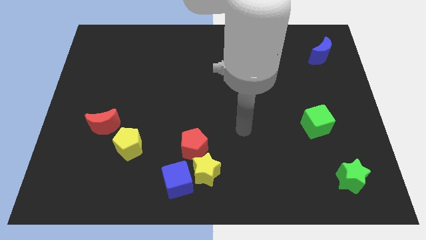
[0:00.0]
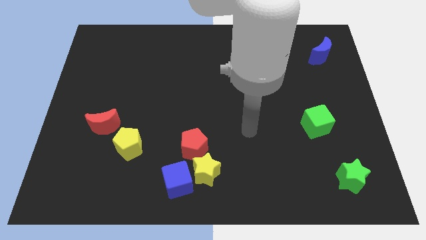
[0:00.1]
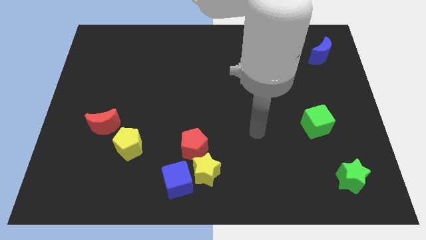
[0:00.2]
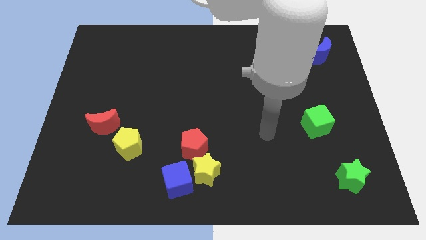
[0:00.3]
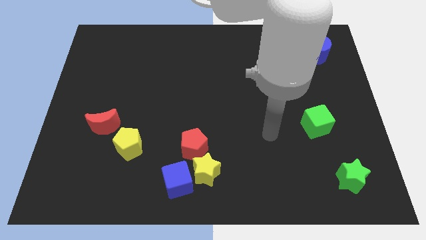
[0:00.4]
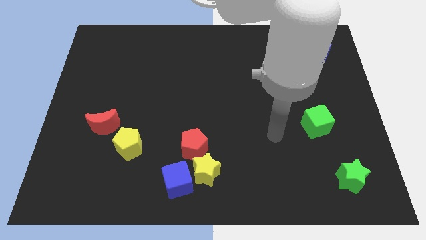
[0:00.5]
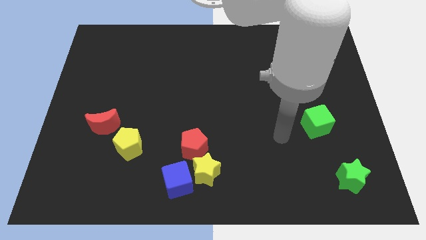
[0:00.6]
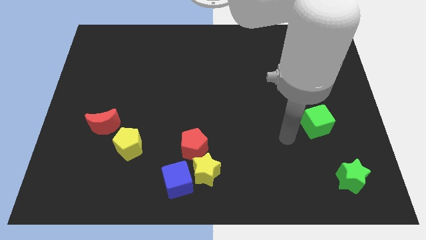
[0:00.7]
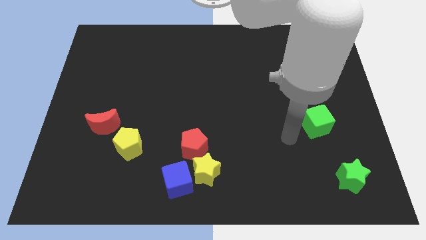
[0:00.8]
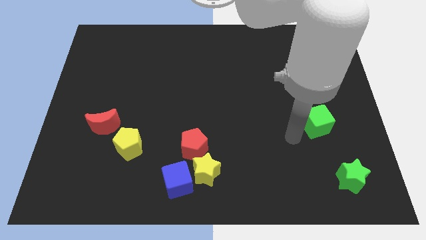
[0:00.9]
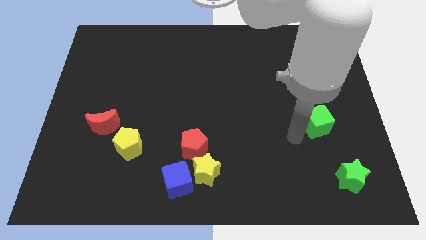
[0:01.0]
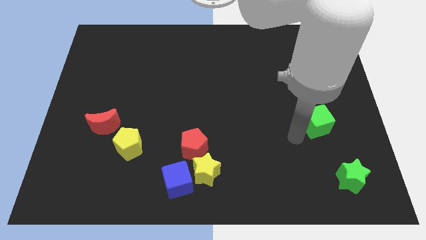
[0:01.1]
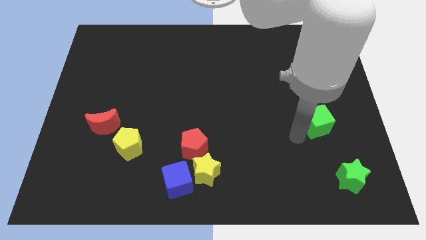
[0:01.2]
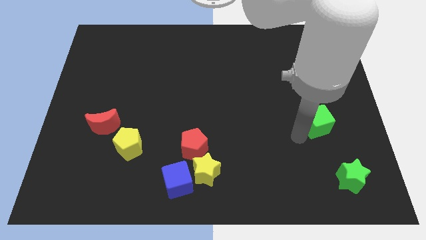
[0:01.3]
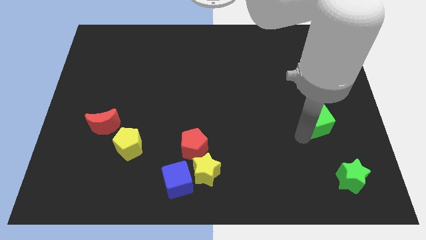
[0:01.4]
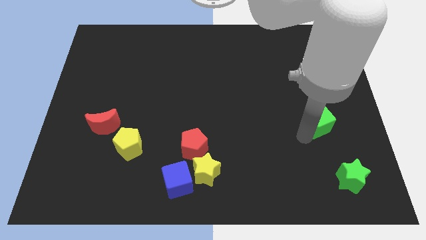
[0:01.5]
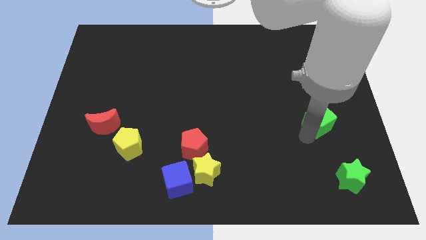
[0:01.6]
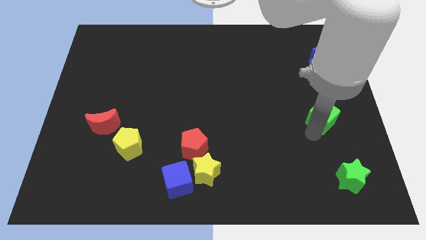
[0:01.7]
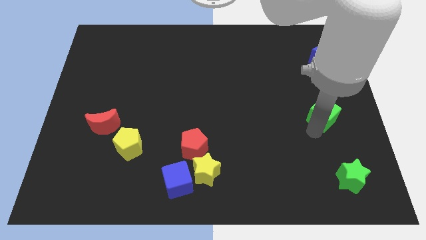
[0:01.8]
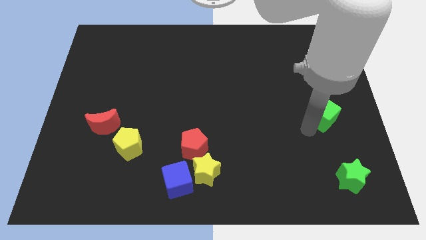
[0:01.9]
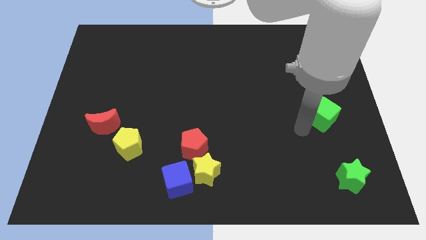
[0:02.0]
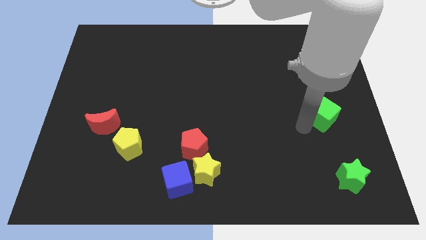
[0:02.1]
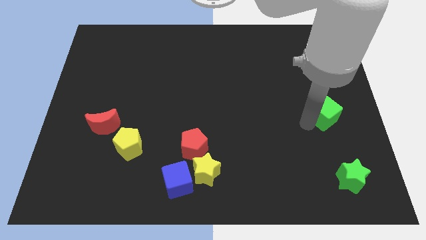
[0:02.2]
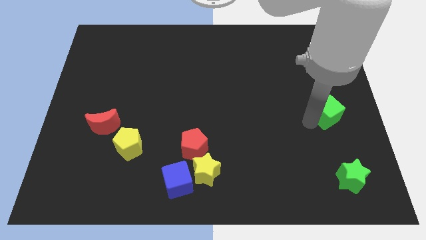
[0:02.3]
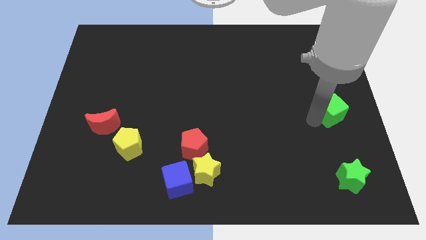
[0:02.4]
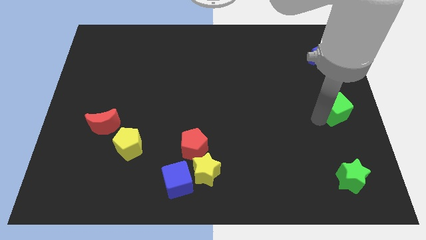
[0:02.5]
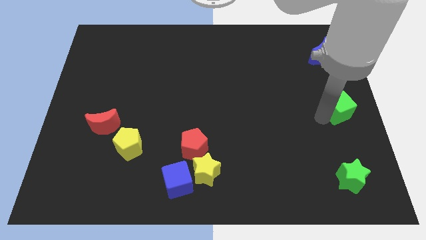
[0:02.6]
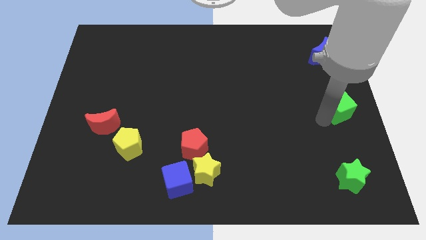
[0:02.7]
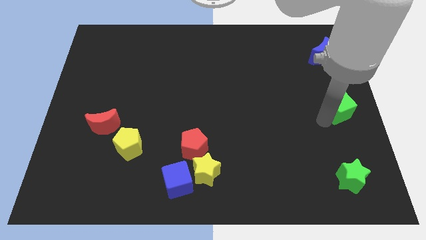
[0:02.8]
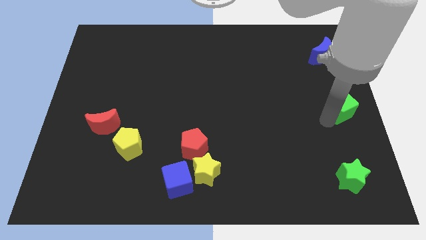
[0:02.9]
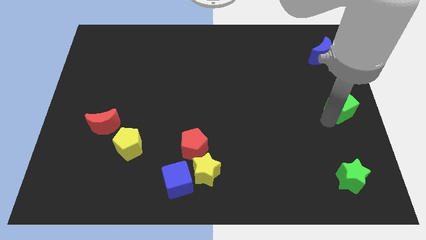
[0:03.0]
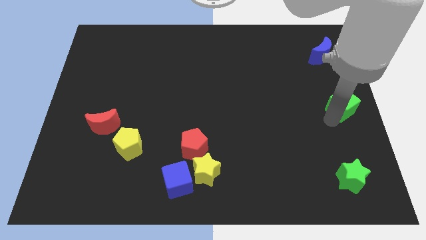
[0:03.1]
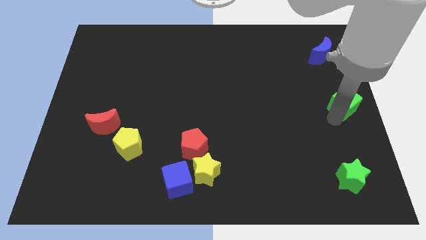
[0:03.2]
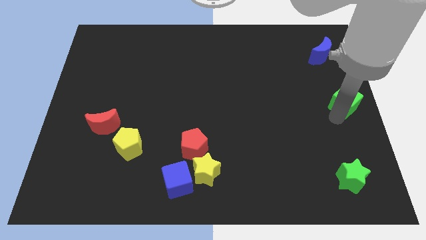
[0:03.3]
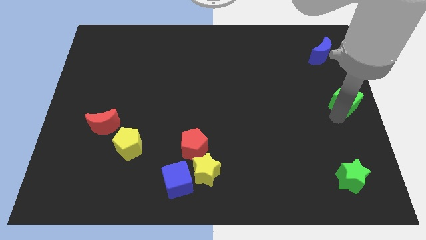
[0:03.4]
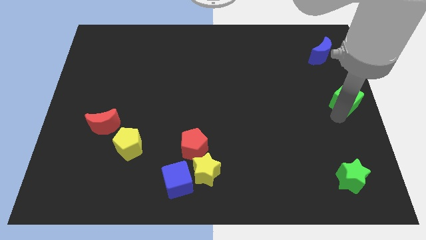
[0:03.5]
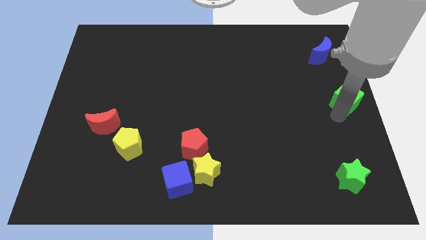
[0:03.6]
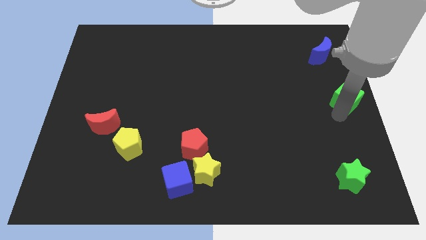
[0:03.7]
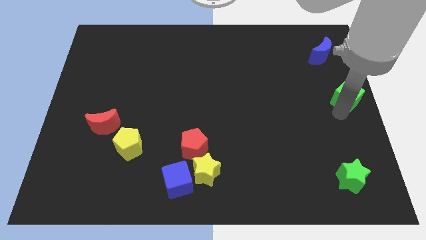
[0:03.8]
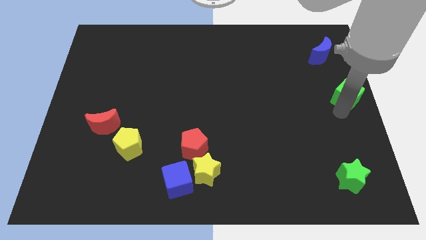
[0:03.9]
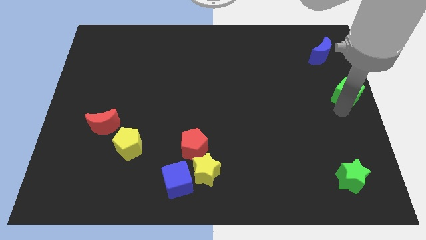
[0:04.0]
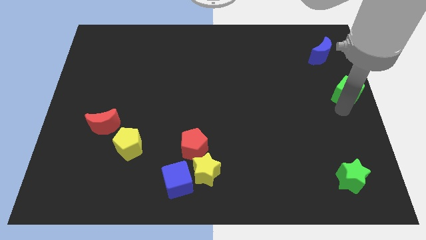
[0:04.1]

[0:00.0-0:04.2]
push the green cube right center of the board

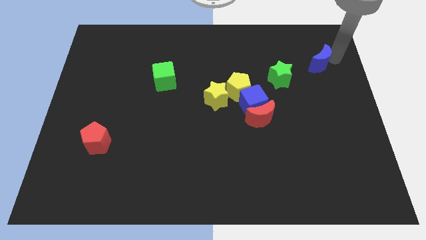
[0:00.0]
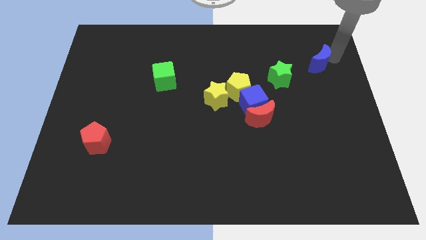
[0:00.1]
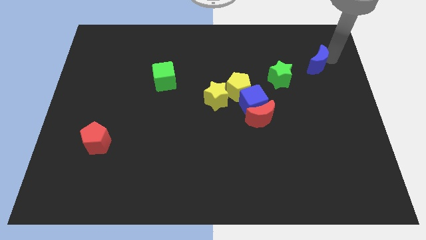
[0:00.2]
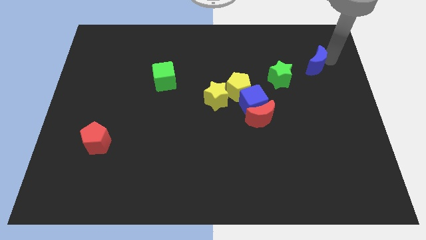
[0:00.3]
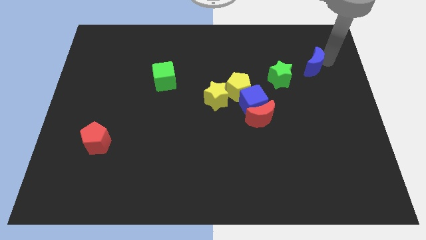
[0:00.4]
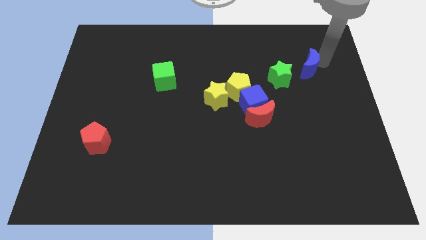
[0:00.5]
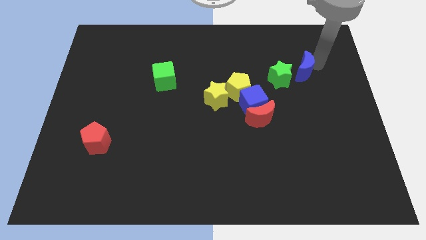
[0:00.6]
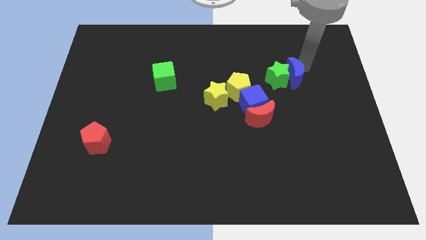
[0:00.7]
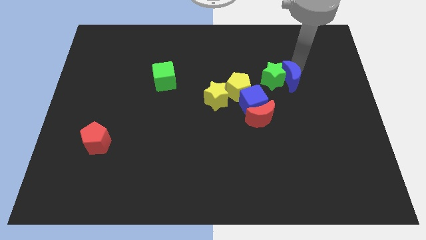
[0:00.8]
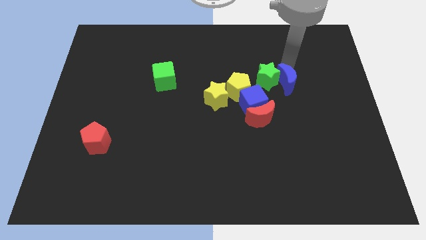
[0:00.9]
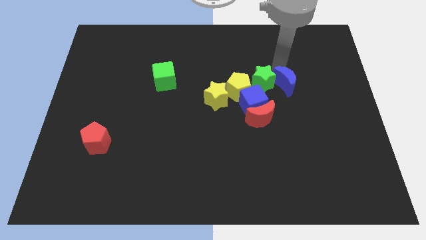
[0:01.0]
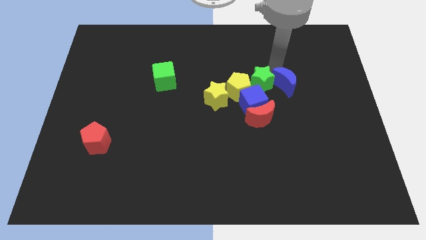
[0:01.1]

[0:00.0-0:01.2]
place the blue moon to the right side of the green star

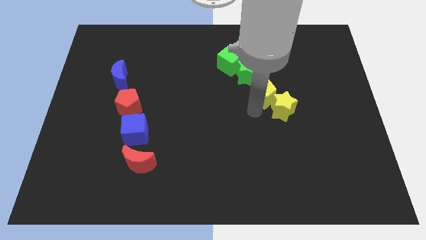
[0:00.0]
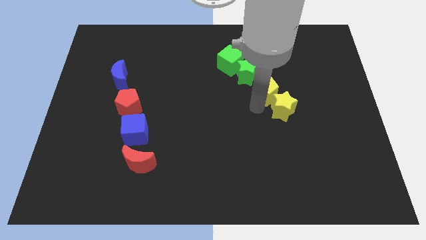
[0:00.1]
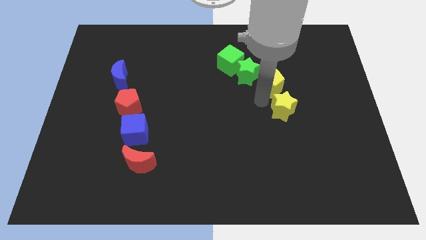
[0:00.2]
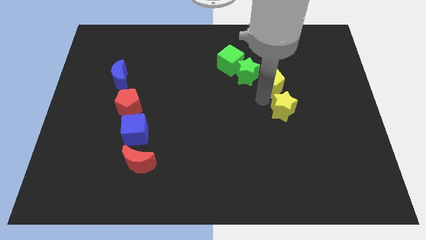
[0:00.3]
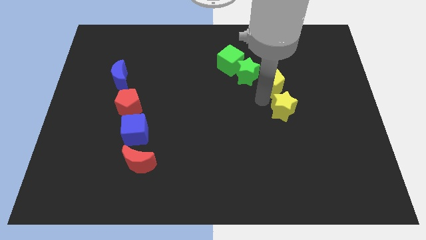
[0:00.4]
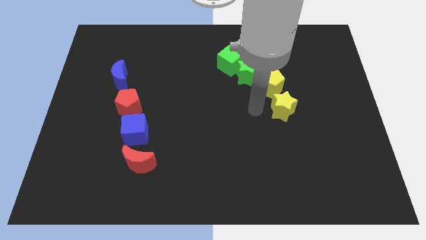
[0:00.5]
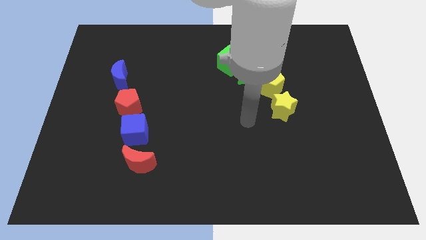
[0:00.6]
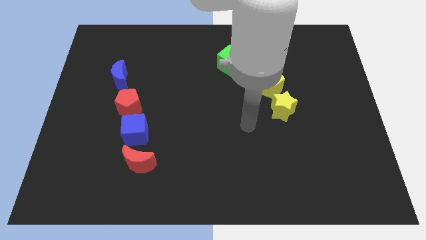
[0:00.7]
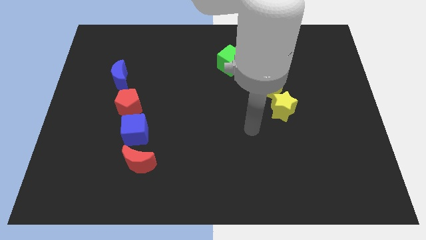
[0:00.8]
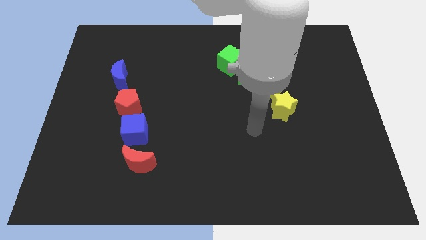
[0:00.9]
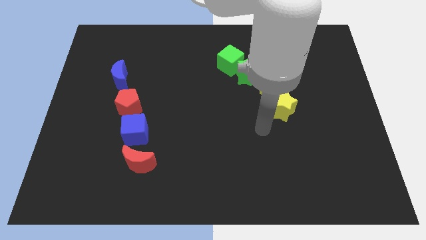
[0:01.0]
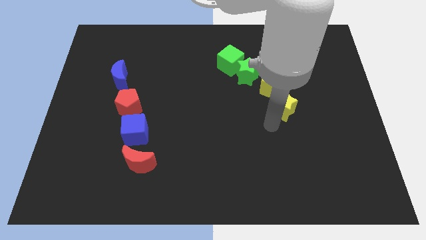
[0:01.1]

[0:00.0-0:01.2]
push the yellow pentagon slightly to the top right side of the board

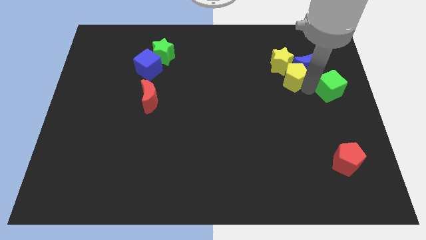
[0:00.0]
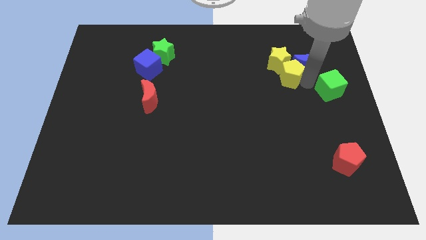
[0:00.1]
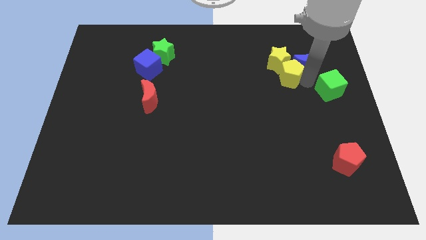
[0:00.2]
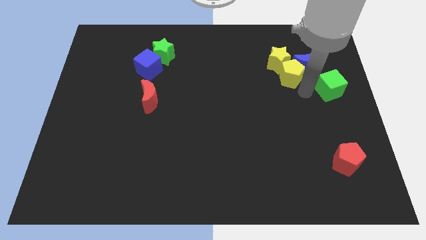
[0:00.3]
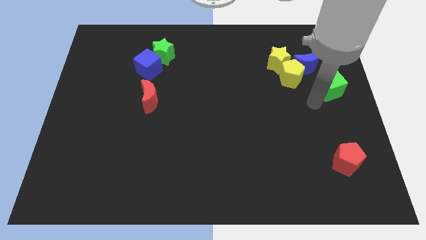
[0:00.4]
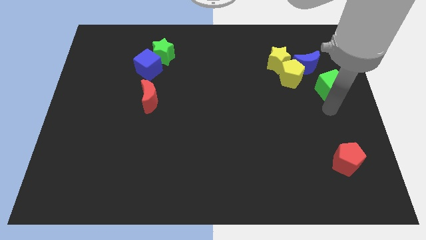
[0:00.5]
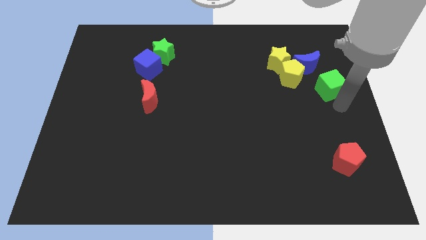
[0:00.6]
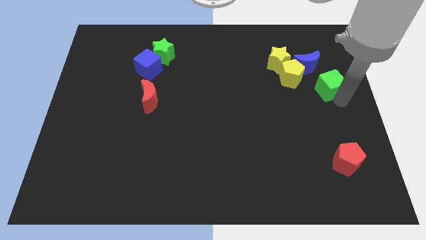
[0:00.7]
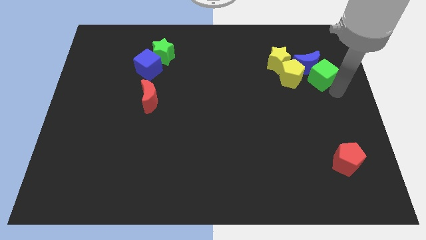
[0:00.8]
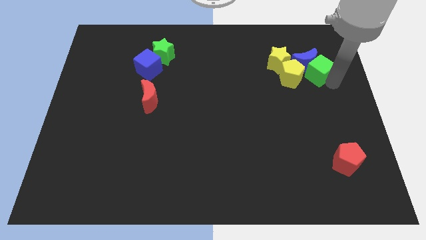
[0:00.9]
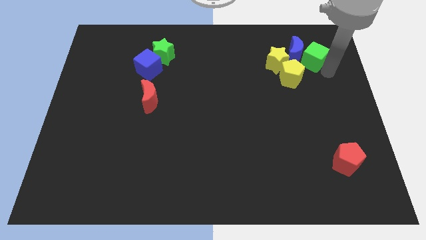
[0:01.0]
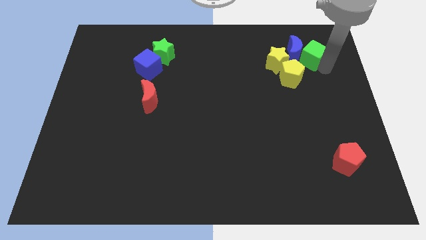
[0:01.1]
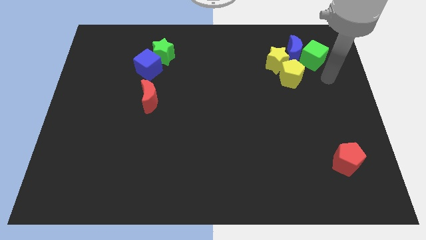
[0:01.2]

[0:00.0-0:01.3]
put the green cube into the blue moon

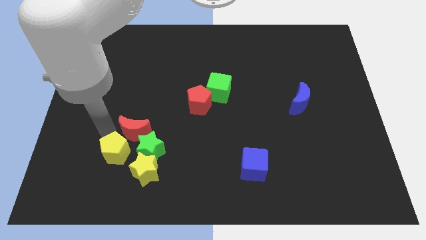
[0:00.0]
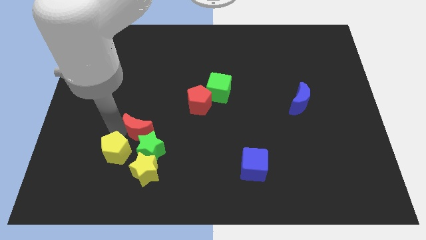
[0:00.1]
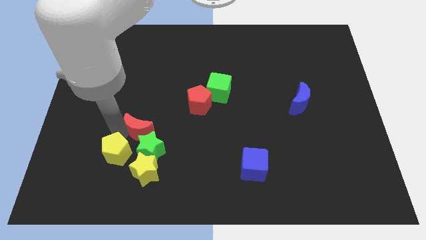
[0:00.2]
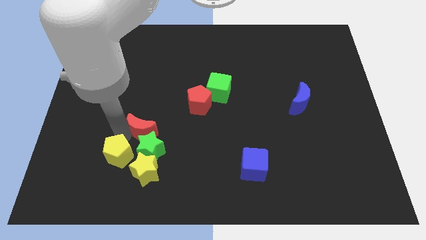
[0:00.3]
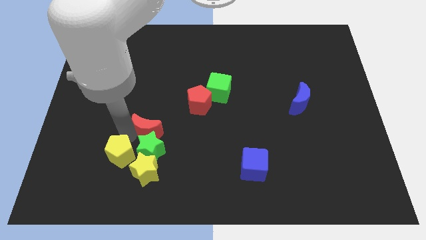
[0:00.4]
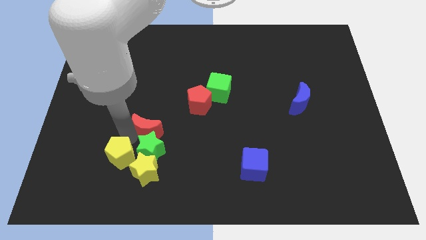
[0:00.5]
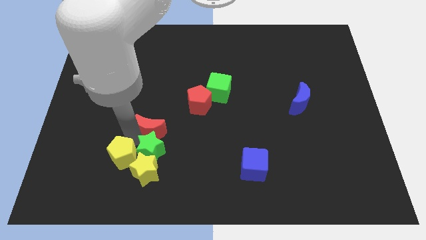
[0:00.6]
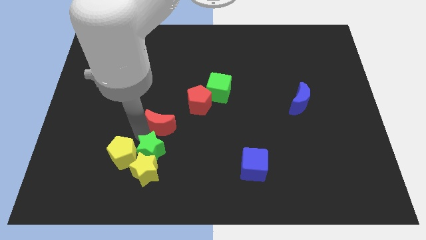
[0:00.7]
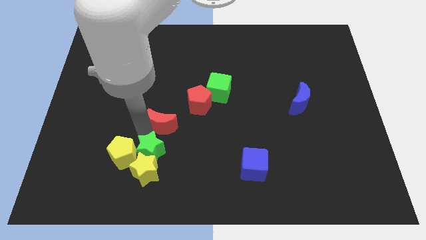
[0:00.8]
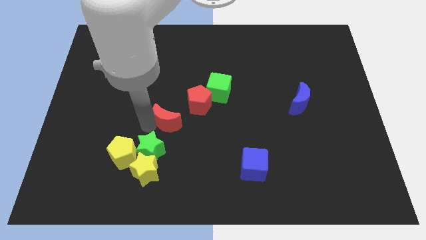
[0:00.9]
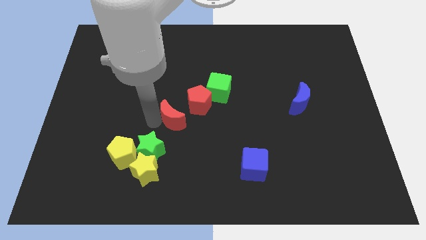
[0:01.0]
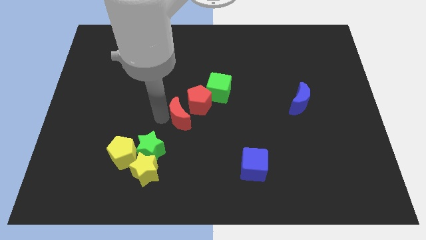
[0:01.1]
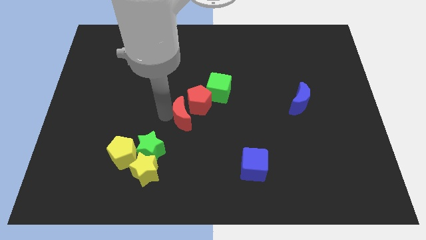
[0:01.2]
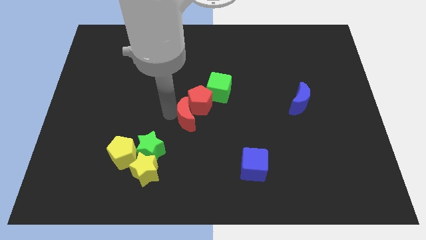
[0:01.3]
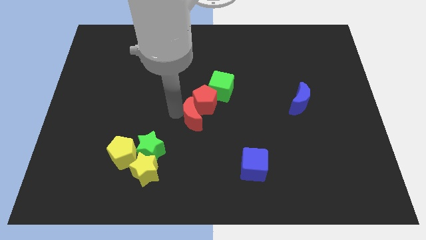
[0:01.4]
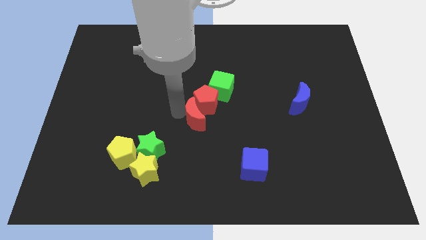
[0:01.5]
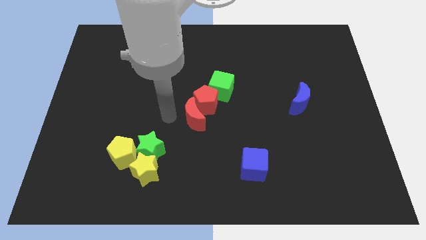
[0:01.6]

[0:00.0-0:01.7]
place red crescent near red pentagon
